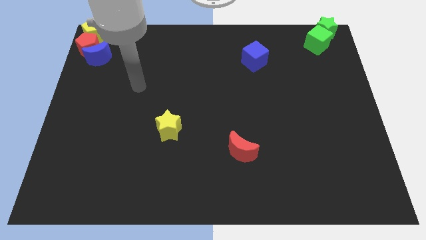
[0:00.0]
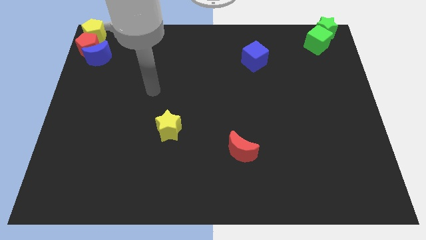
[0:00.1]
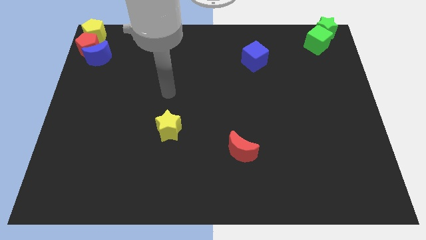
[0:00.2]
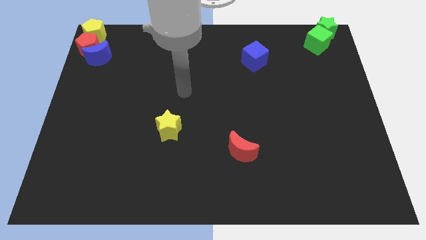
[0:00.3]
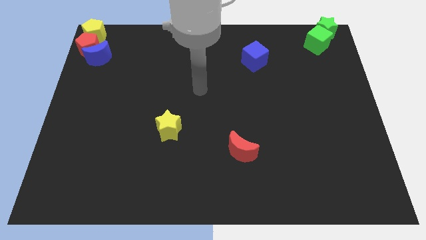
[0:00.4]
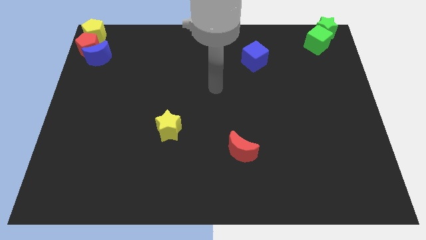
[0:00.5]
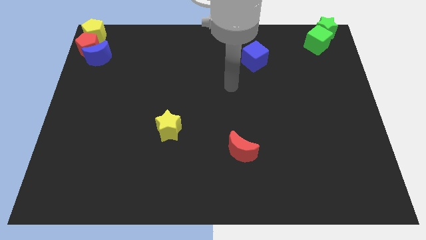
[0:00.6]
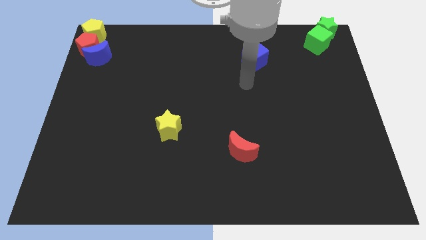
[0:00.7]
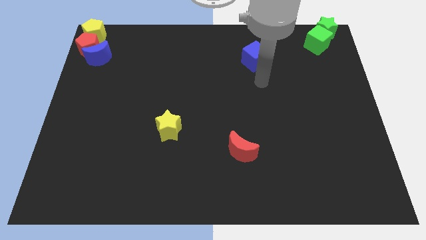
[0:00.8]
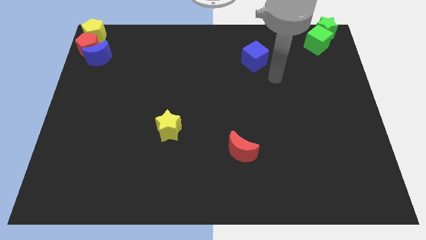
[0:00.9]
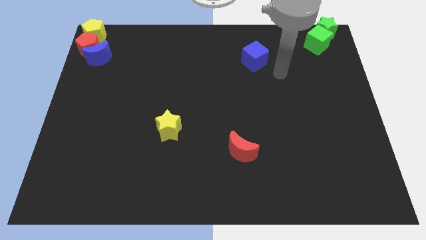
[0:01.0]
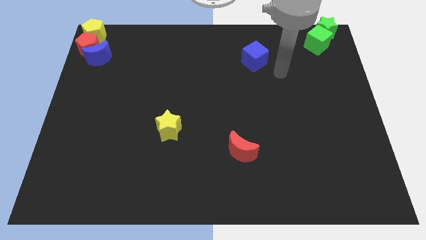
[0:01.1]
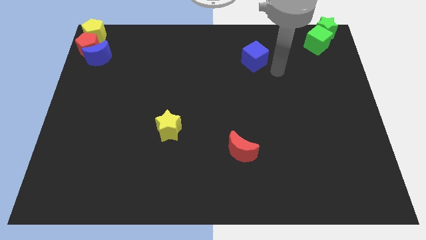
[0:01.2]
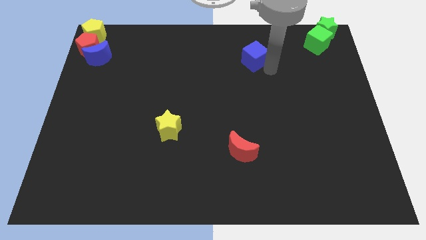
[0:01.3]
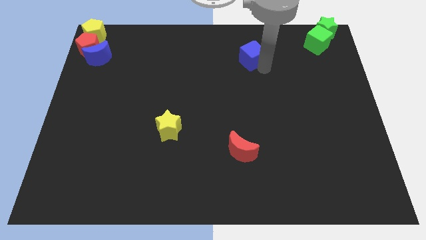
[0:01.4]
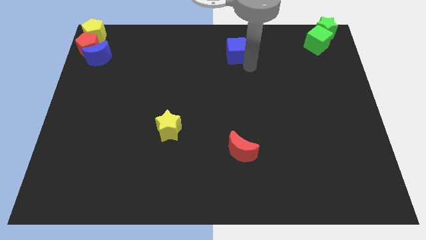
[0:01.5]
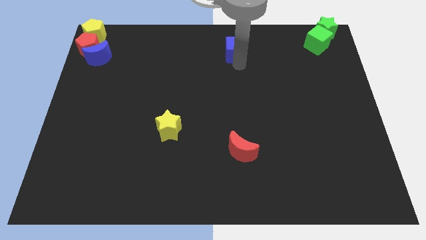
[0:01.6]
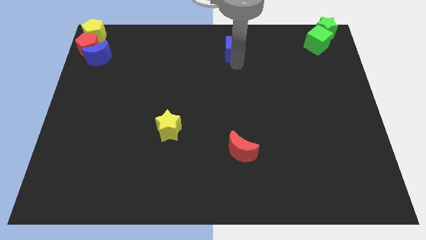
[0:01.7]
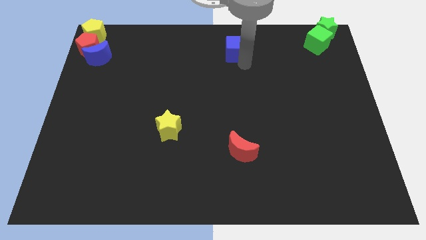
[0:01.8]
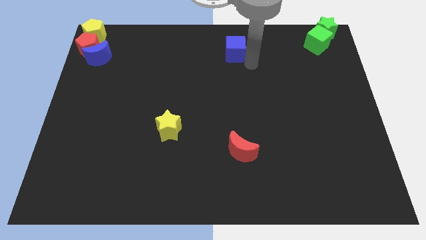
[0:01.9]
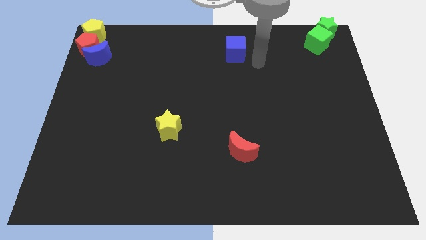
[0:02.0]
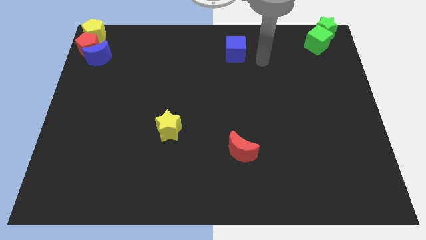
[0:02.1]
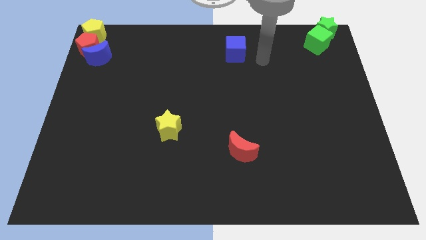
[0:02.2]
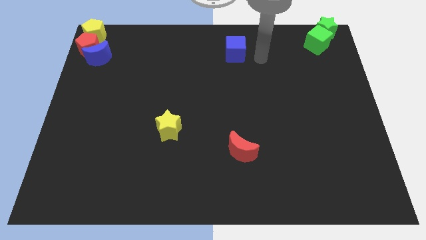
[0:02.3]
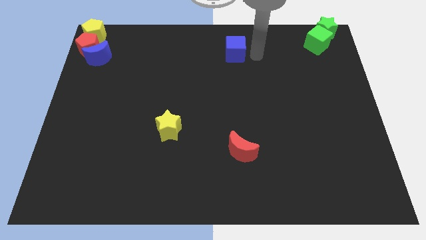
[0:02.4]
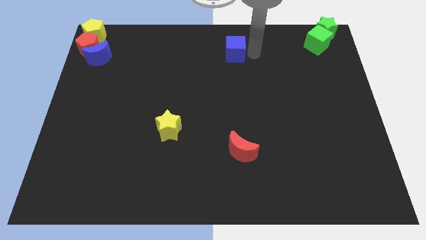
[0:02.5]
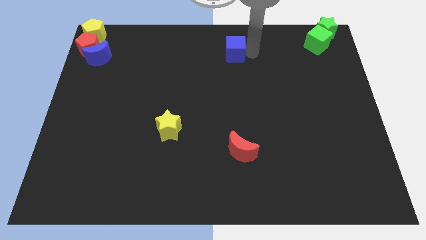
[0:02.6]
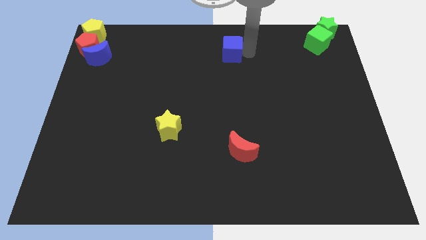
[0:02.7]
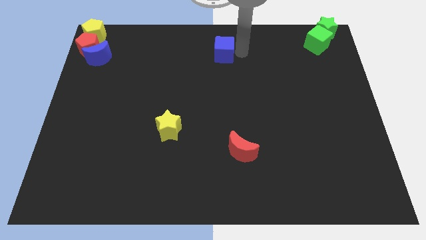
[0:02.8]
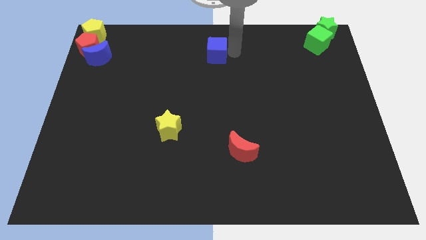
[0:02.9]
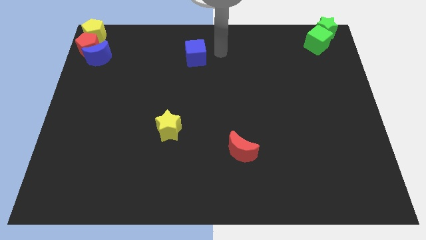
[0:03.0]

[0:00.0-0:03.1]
move the blue cube to the left side of the table

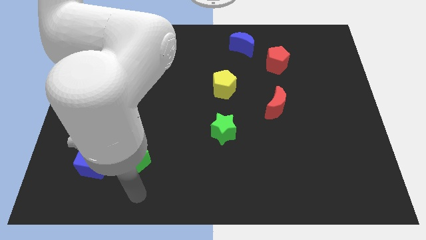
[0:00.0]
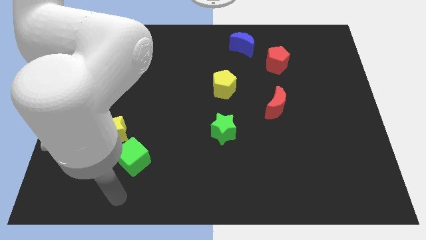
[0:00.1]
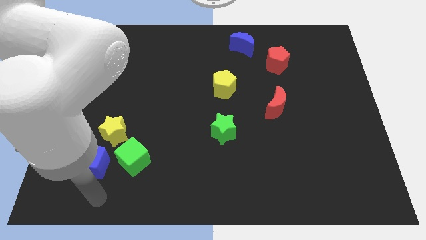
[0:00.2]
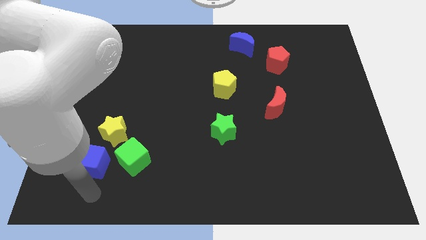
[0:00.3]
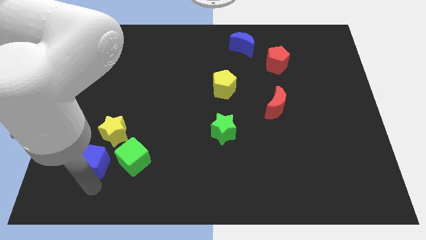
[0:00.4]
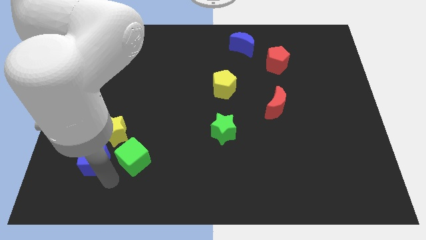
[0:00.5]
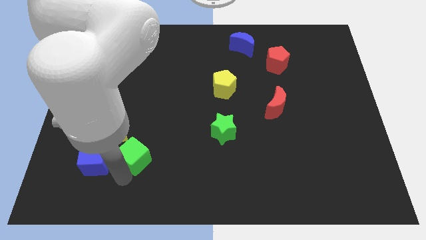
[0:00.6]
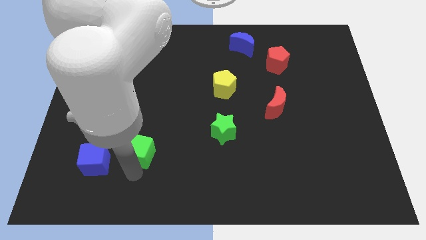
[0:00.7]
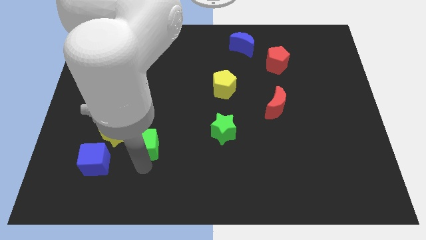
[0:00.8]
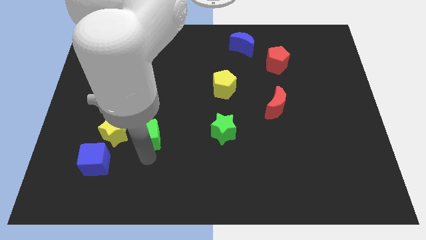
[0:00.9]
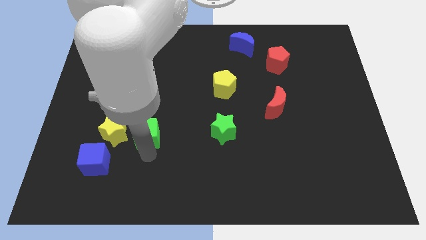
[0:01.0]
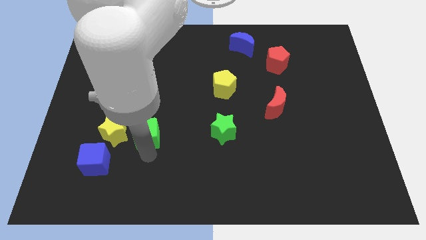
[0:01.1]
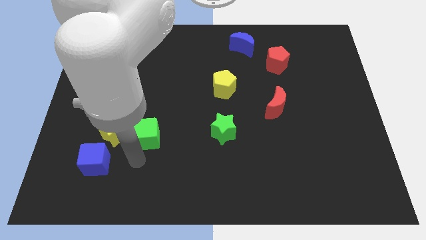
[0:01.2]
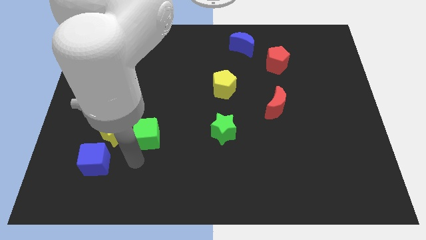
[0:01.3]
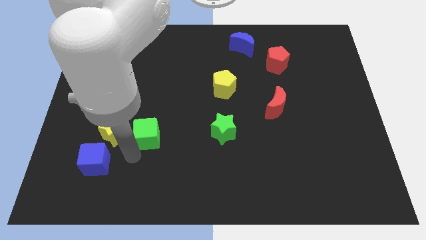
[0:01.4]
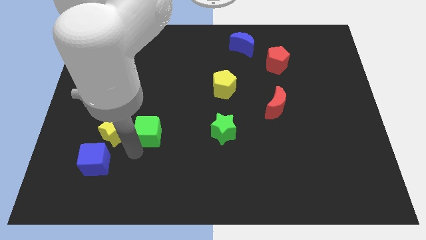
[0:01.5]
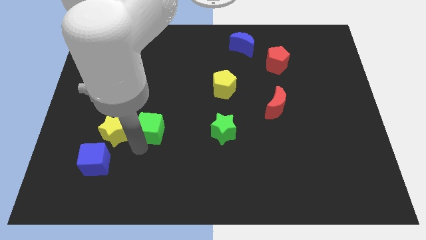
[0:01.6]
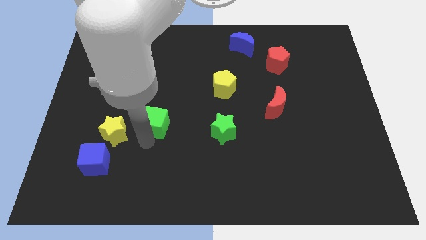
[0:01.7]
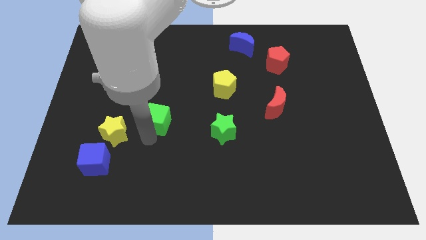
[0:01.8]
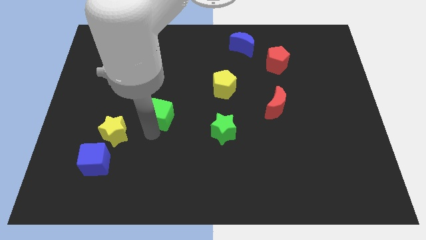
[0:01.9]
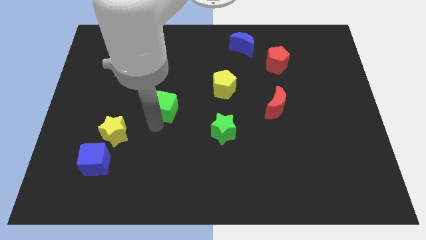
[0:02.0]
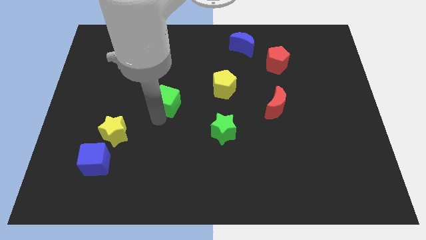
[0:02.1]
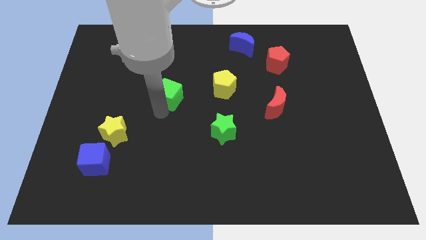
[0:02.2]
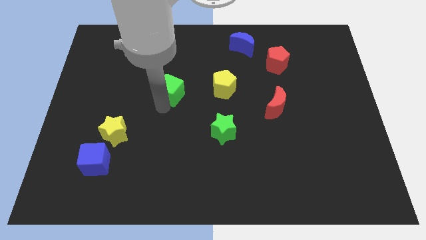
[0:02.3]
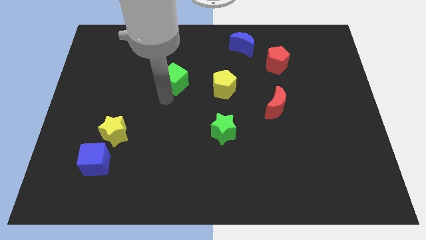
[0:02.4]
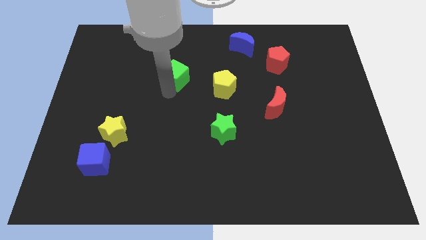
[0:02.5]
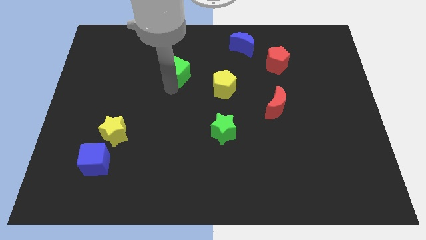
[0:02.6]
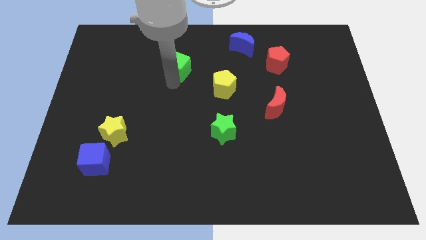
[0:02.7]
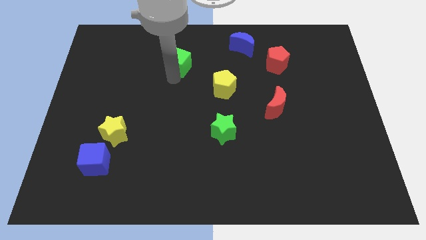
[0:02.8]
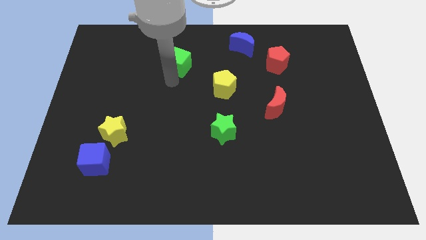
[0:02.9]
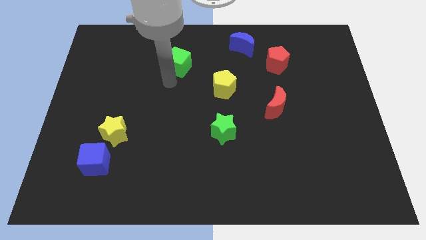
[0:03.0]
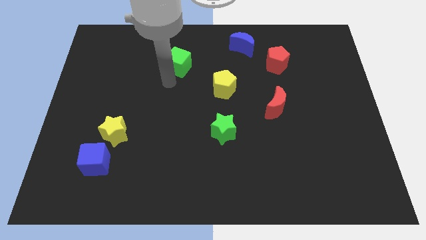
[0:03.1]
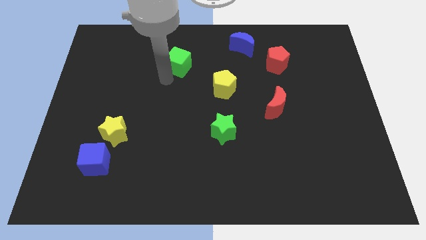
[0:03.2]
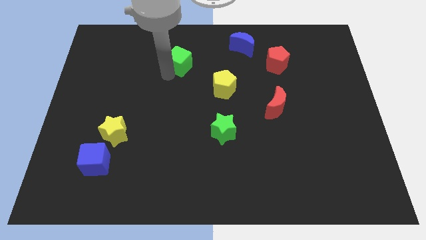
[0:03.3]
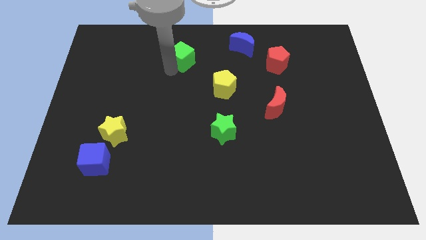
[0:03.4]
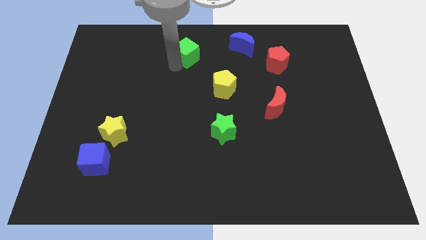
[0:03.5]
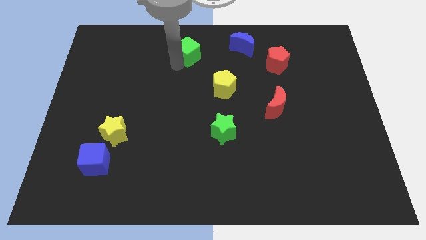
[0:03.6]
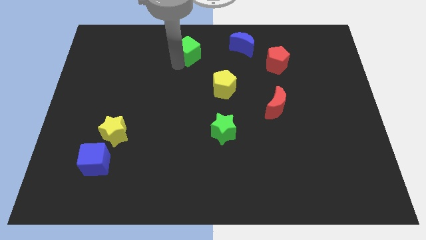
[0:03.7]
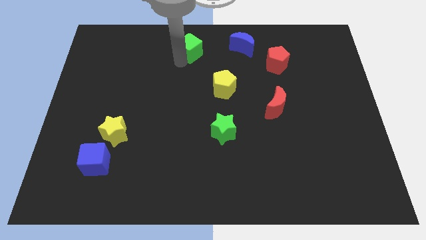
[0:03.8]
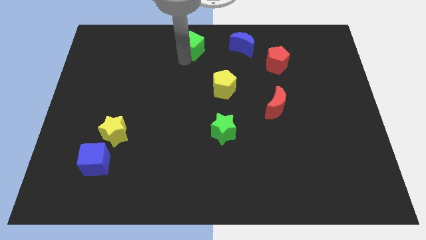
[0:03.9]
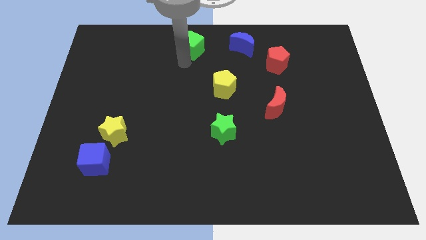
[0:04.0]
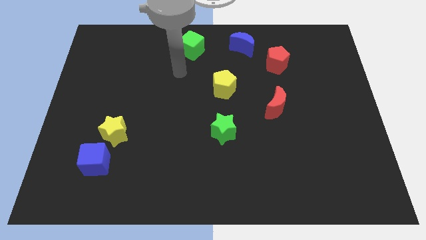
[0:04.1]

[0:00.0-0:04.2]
drag the green cube diagonal to the yellow pentagon

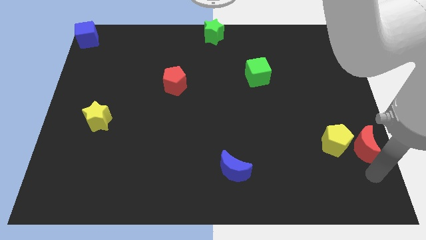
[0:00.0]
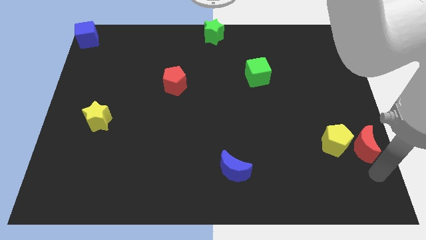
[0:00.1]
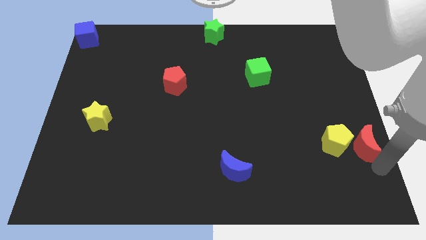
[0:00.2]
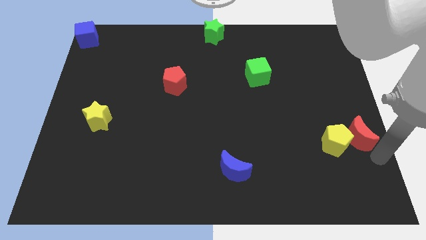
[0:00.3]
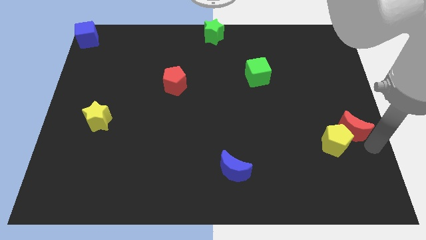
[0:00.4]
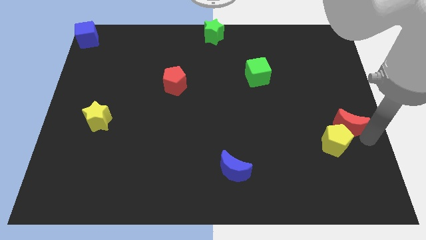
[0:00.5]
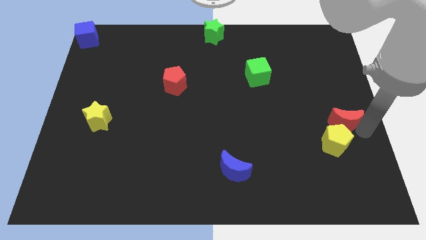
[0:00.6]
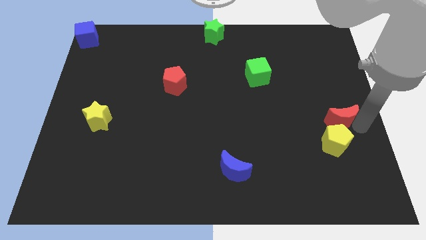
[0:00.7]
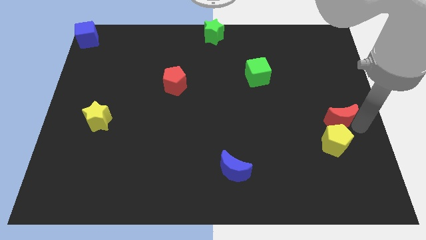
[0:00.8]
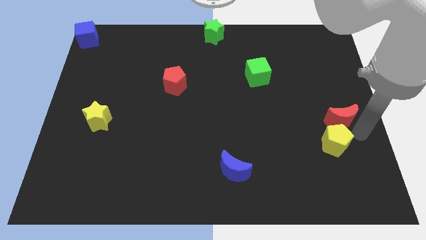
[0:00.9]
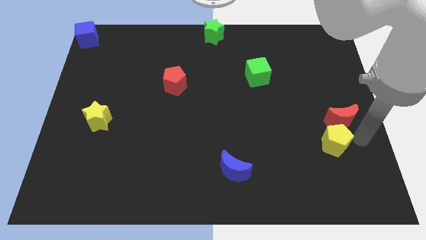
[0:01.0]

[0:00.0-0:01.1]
place the red moon above the yellow pentagon

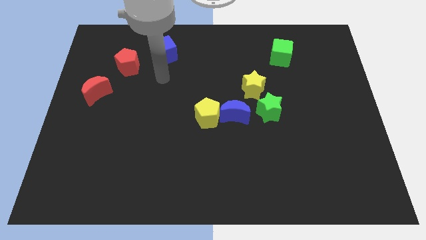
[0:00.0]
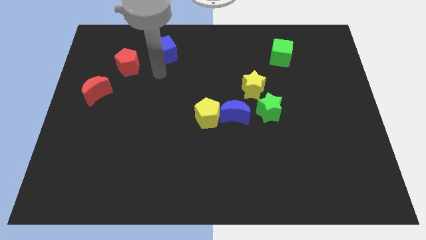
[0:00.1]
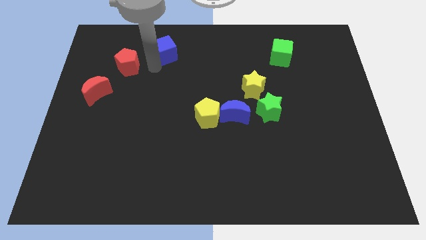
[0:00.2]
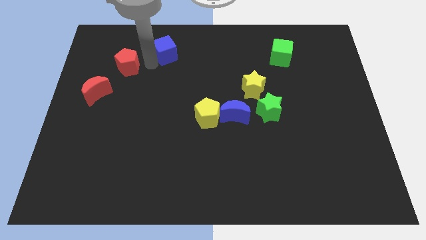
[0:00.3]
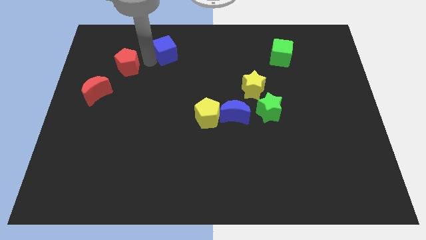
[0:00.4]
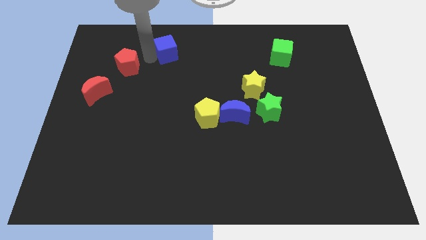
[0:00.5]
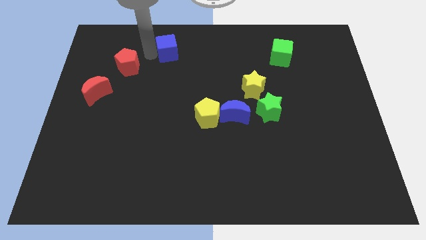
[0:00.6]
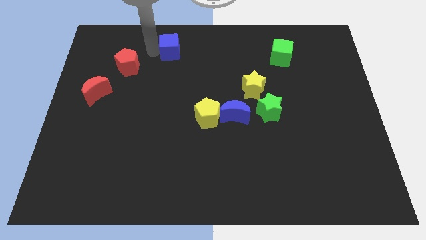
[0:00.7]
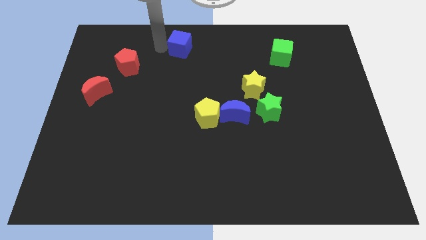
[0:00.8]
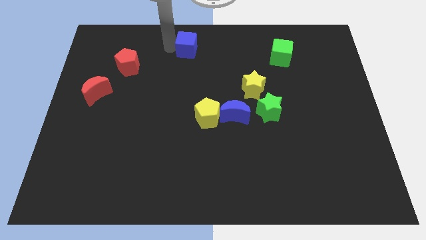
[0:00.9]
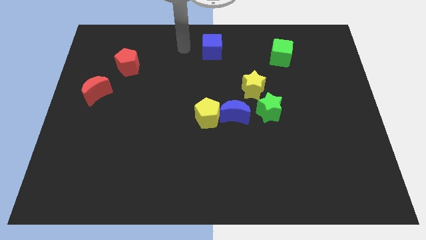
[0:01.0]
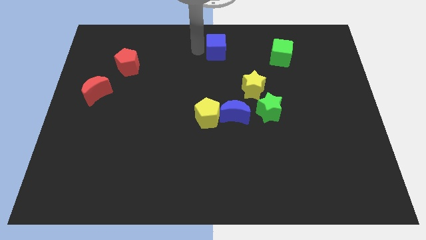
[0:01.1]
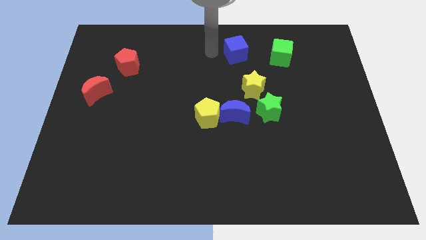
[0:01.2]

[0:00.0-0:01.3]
move the blue cube towards the green cube
